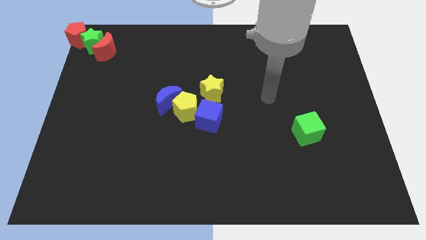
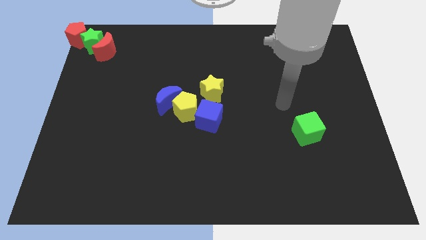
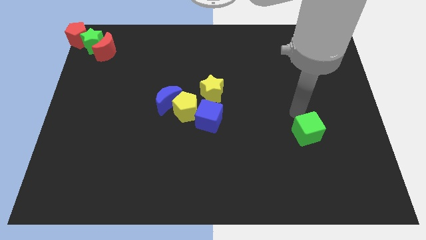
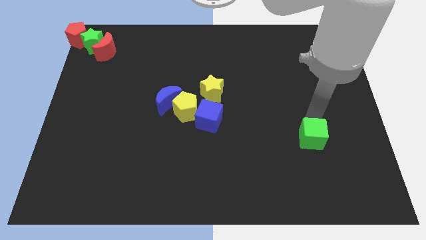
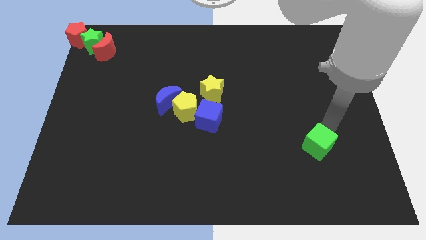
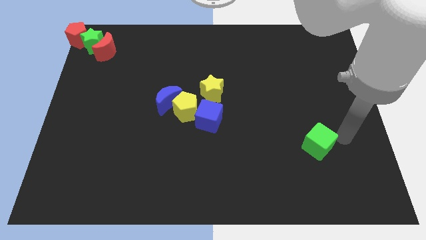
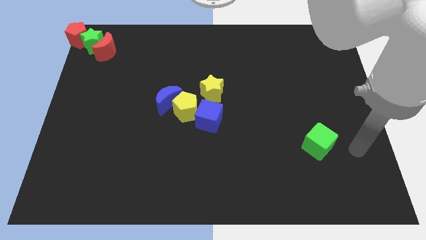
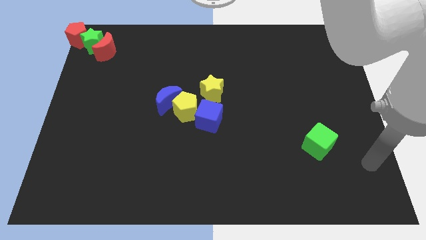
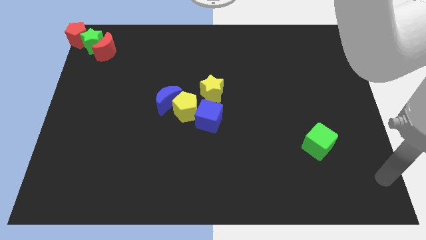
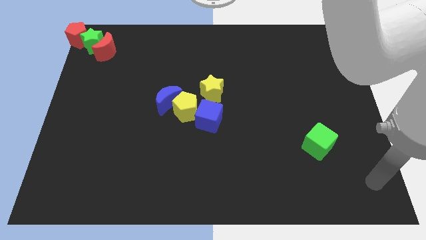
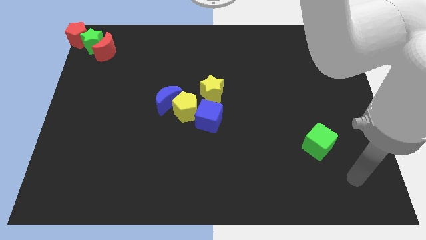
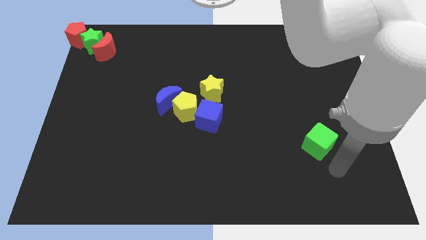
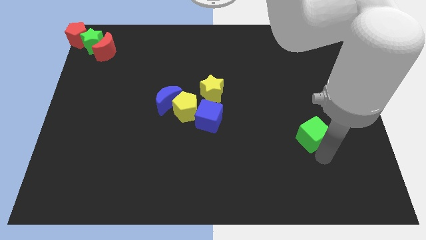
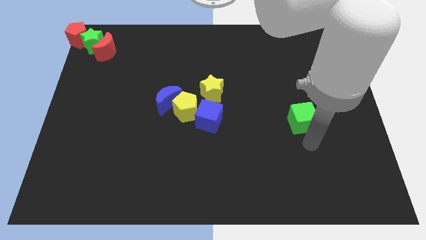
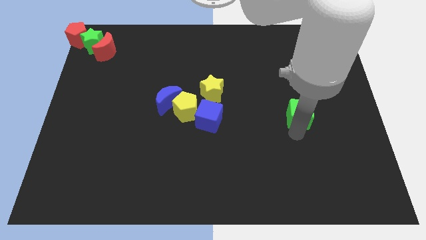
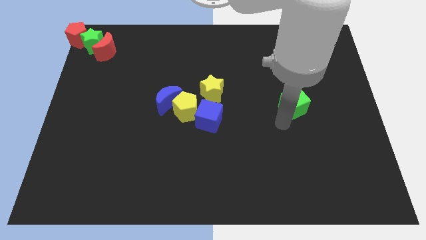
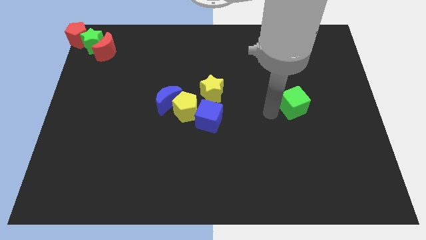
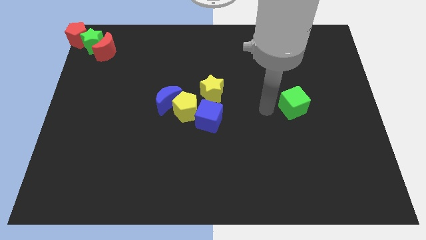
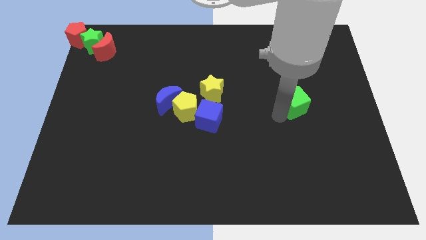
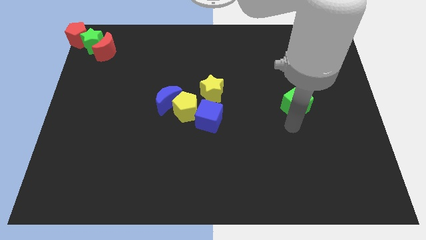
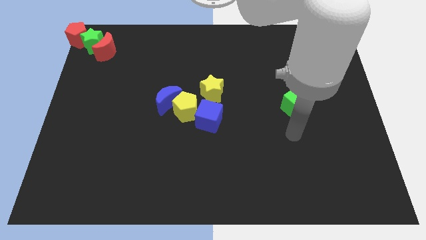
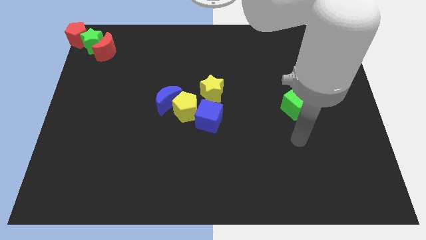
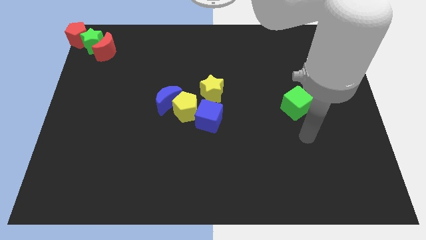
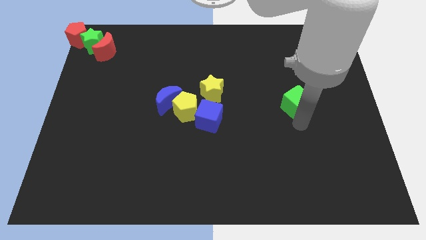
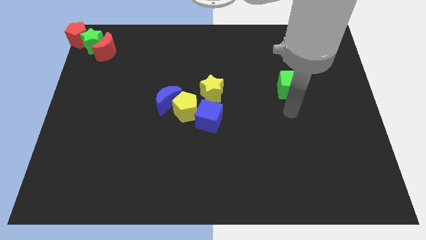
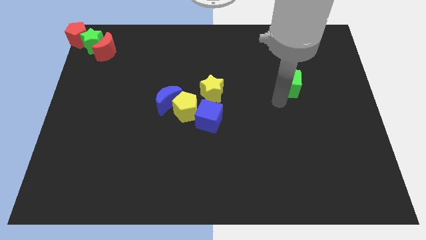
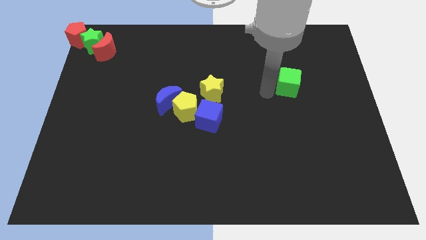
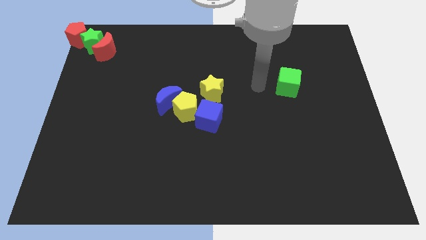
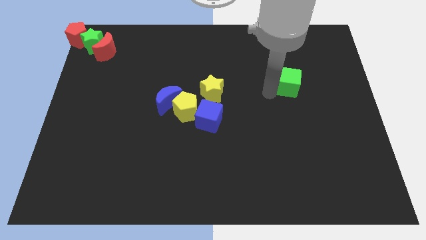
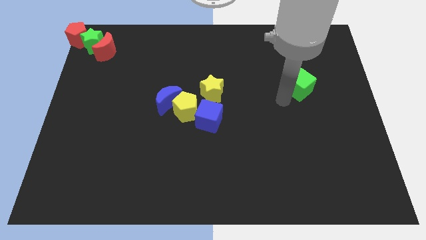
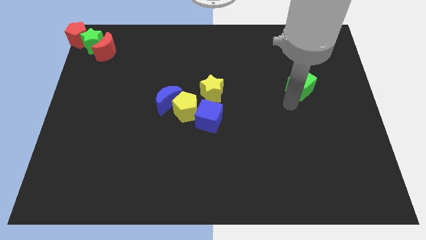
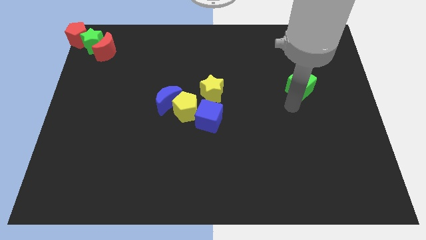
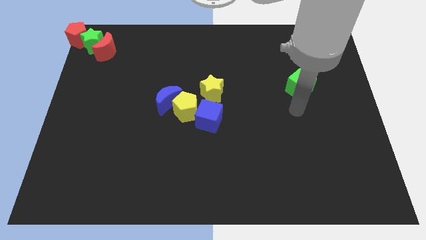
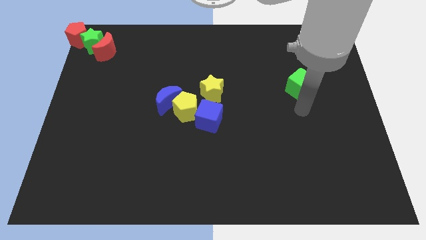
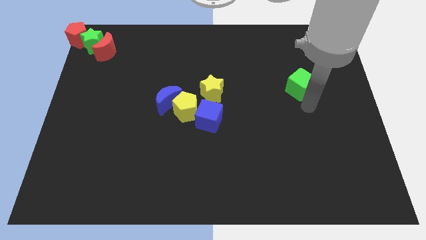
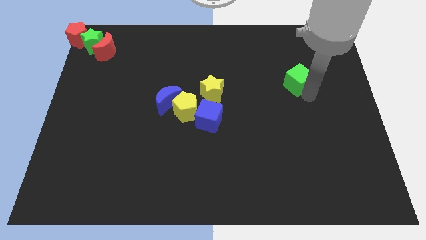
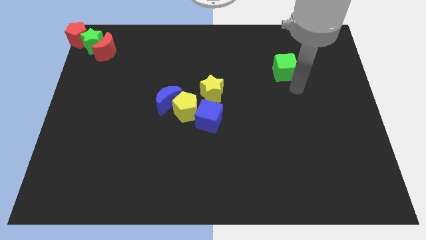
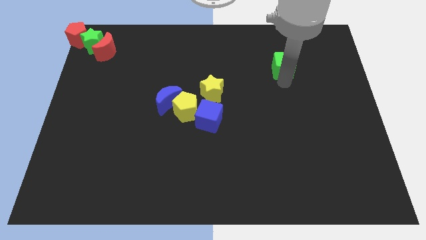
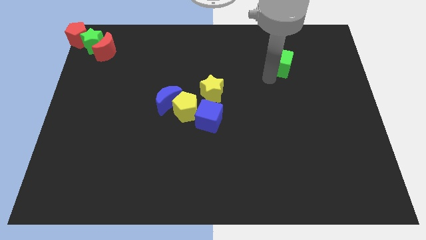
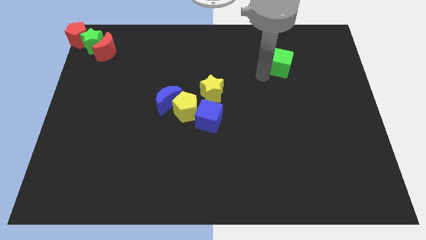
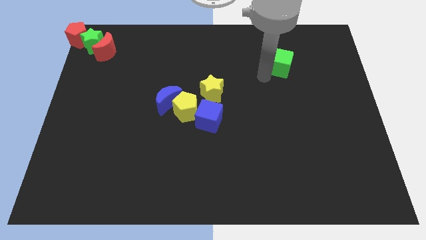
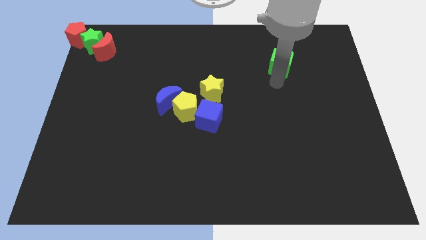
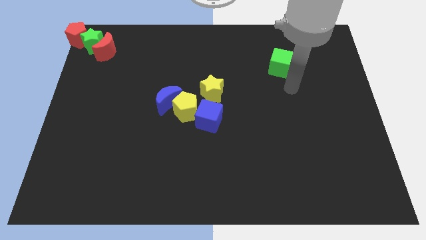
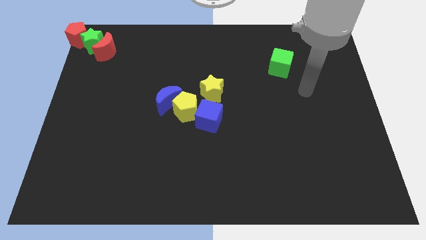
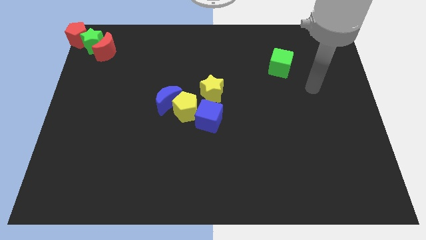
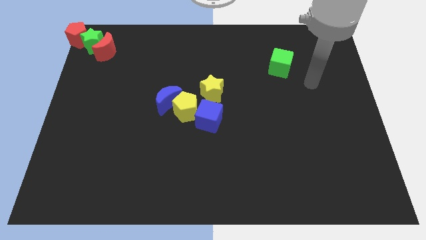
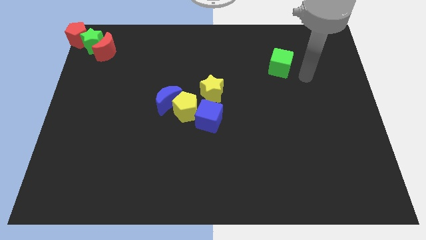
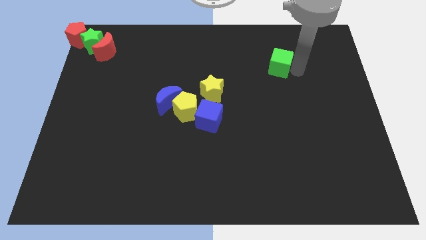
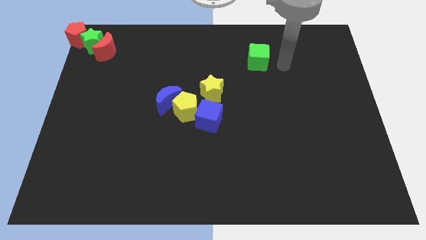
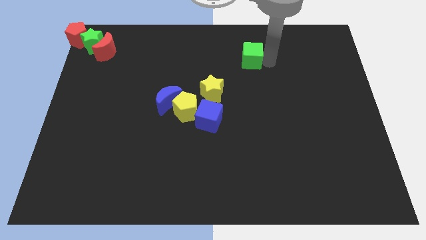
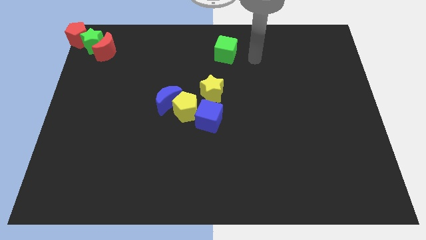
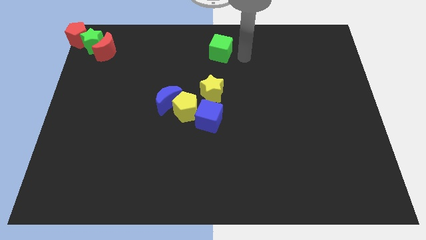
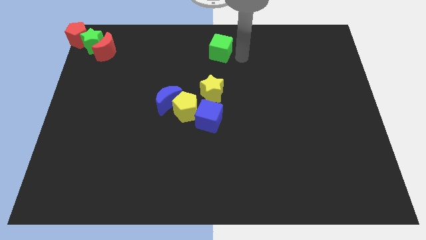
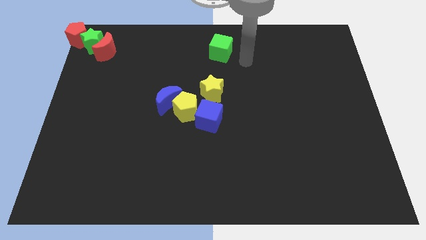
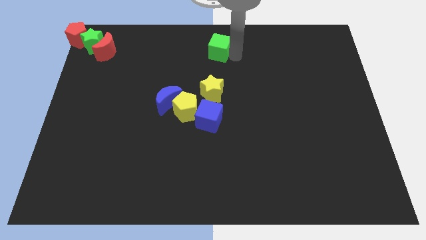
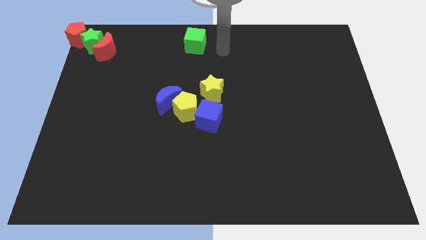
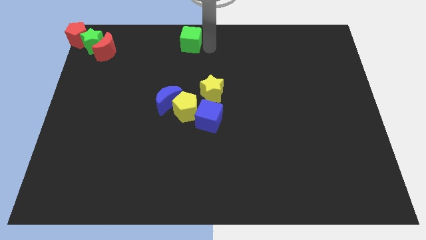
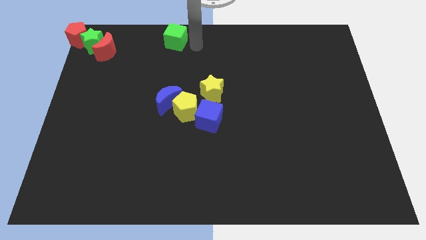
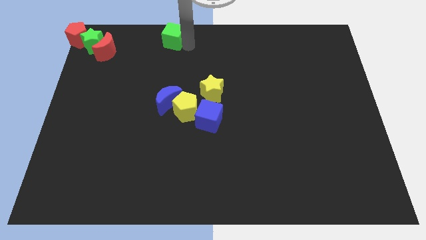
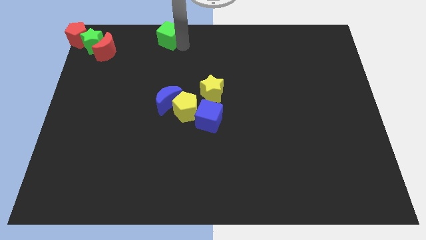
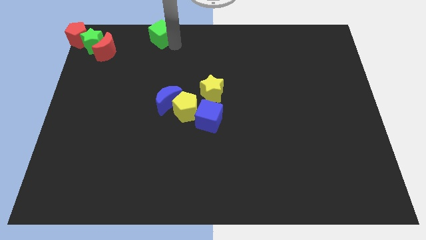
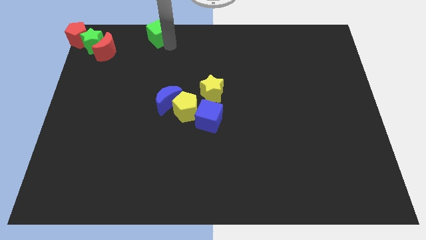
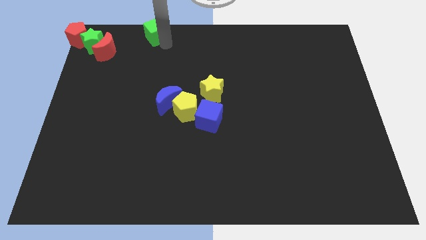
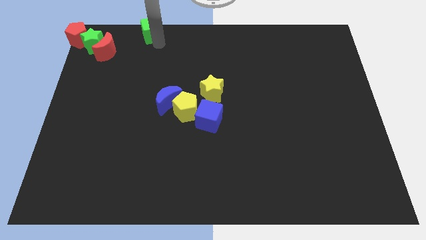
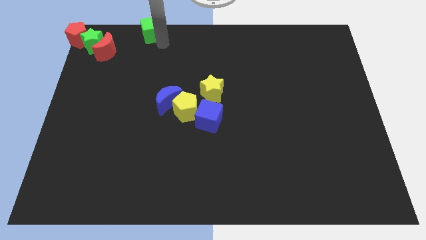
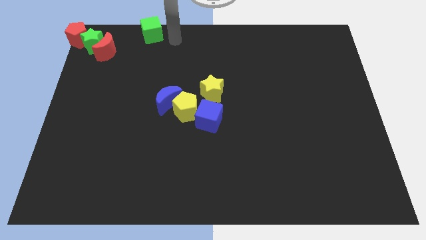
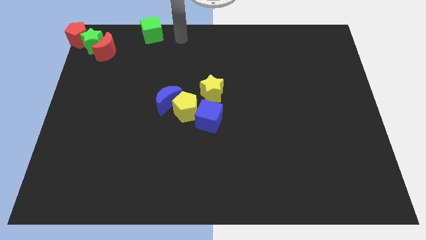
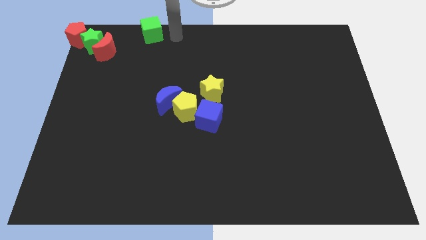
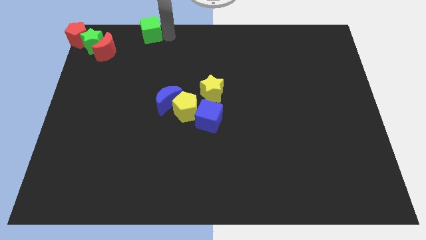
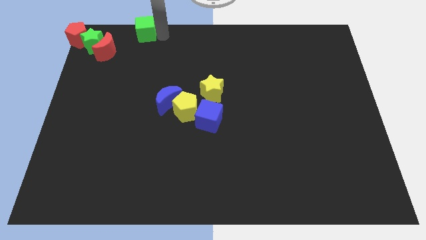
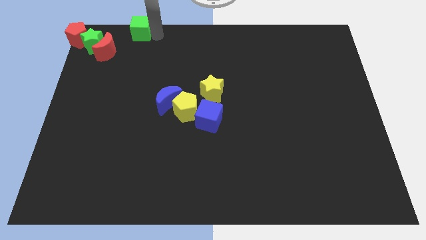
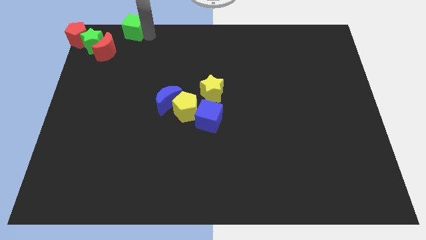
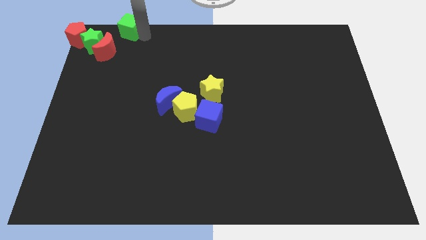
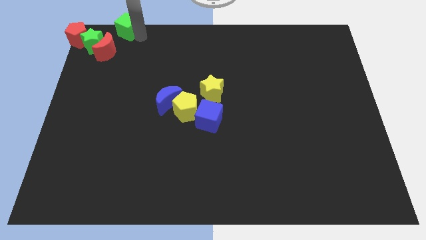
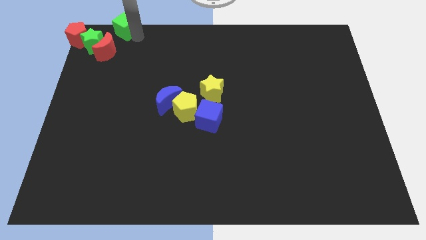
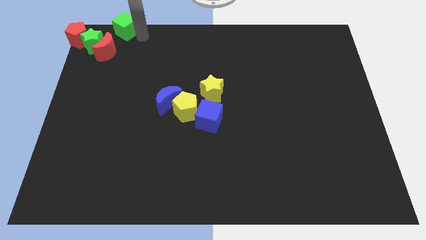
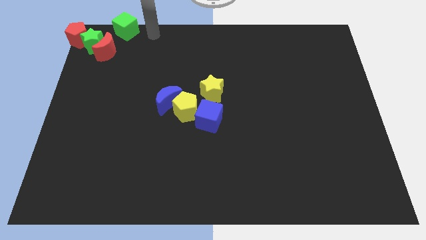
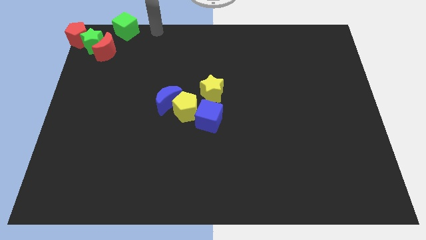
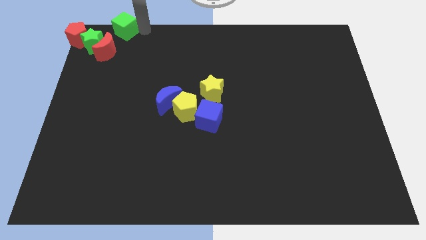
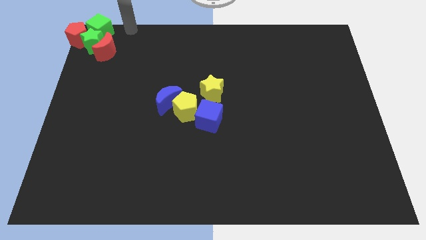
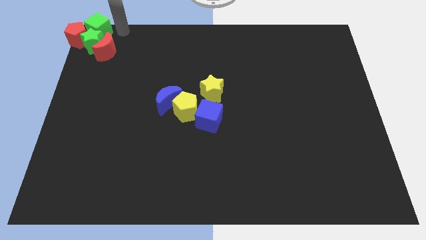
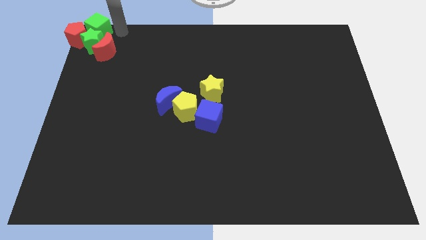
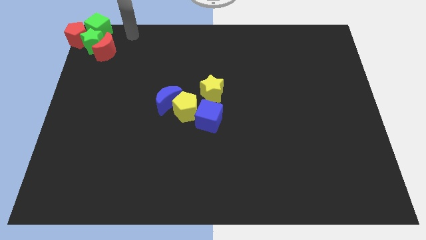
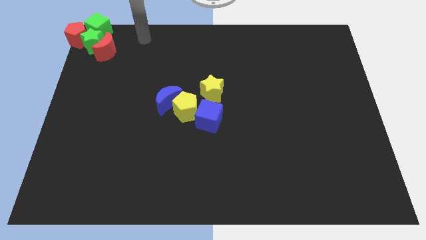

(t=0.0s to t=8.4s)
move the green cube to right side of re pentagon

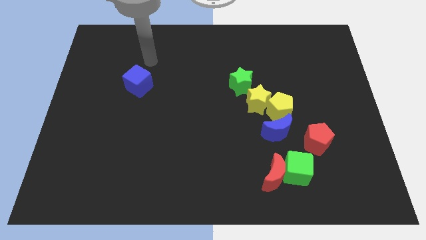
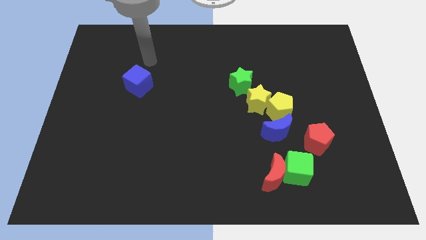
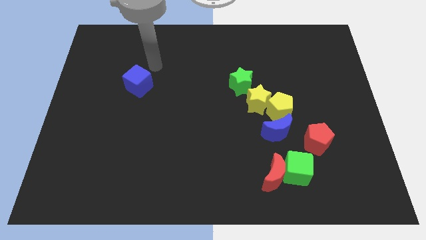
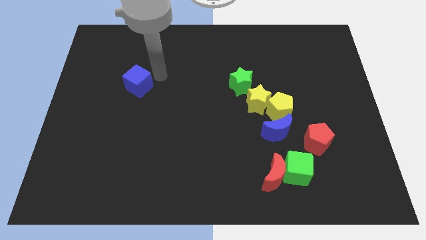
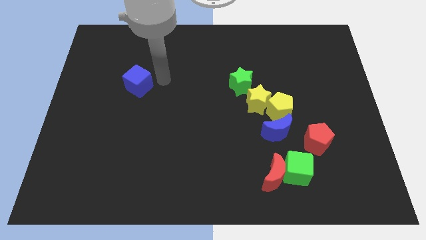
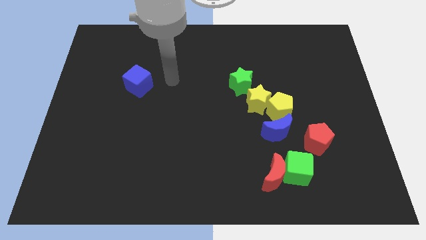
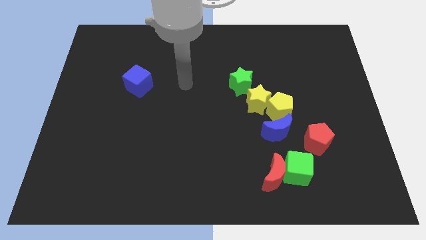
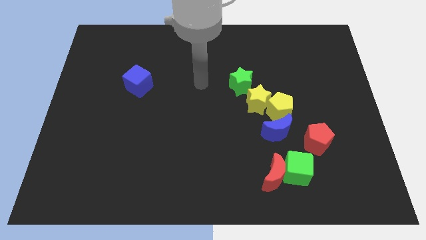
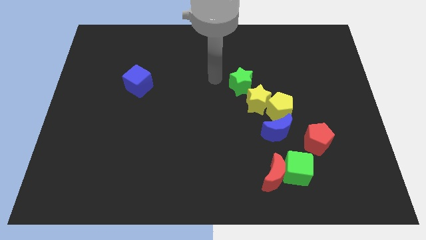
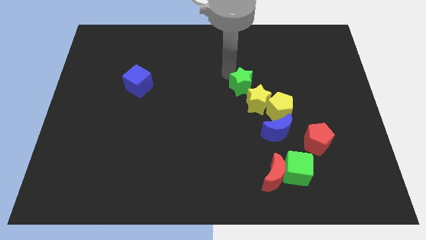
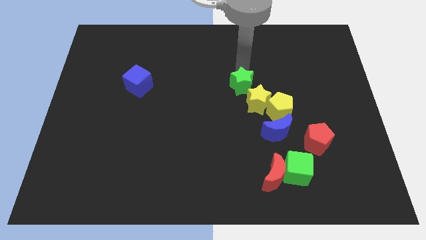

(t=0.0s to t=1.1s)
move your arm to the top side of the green star
